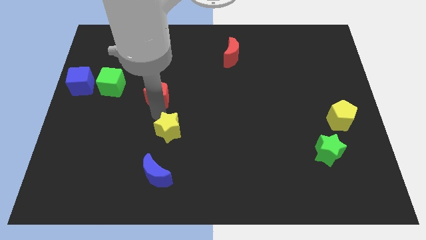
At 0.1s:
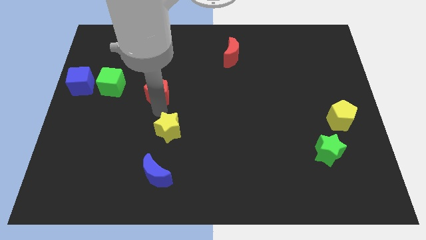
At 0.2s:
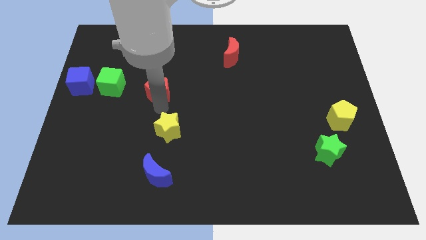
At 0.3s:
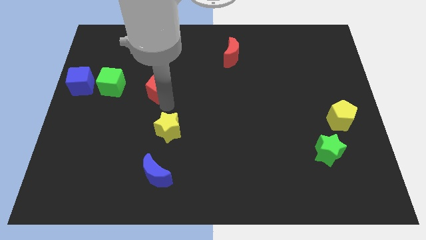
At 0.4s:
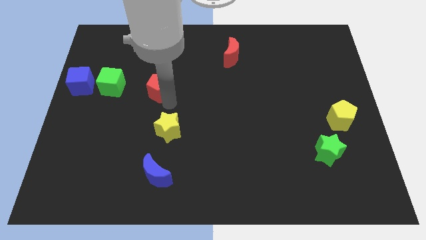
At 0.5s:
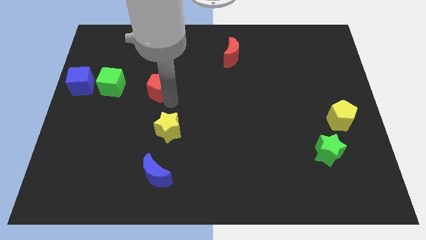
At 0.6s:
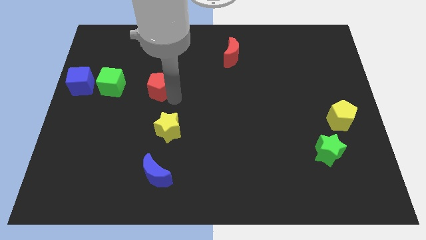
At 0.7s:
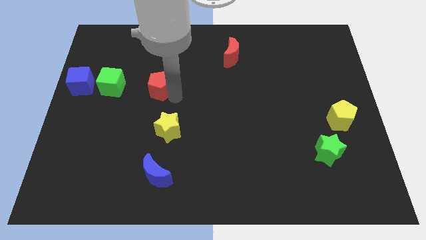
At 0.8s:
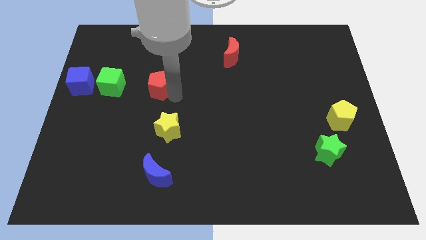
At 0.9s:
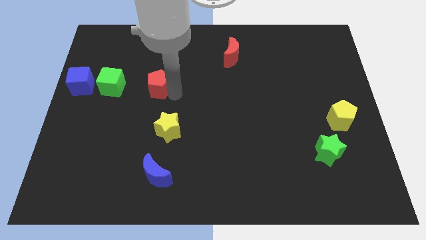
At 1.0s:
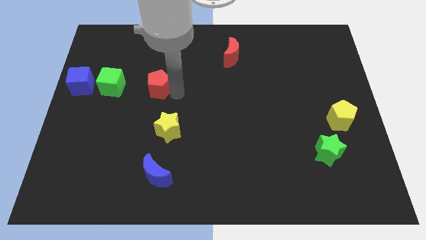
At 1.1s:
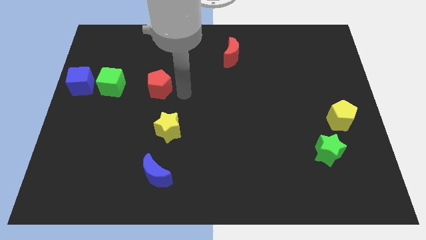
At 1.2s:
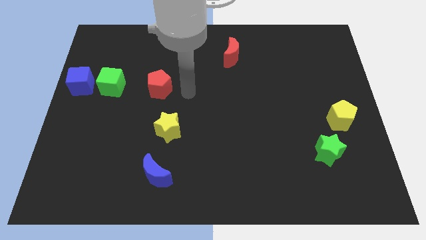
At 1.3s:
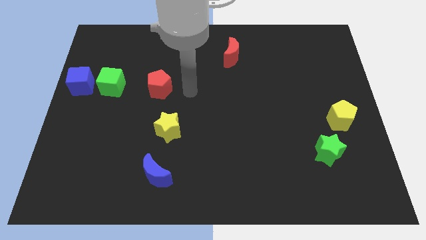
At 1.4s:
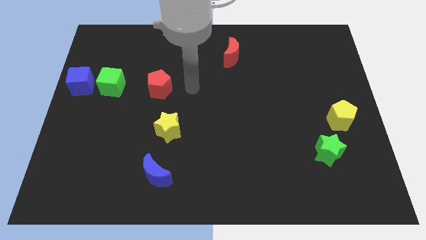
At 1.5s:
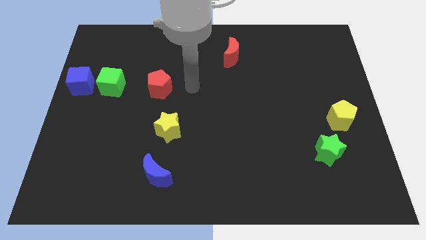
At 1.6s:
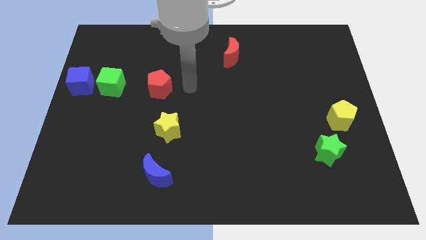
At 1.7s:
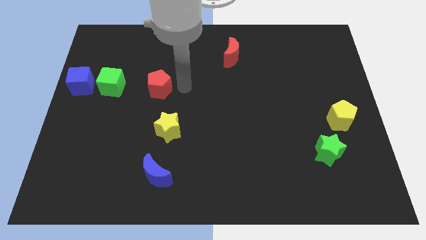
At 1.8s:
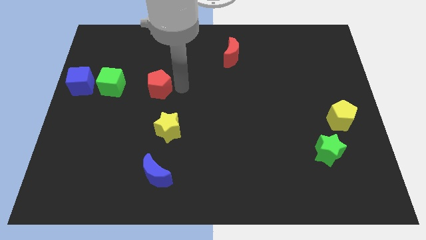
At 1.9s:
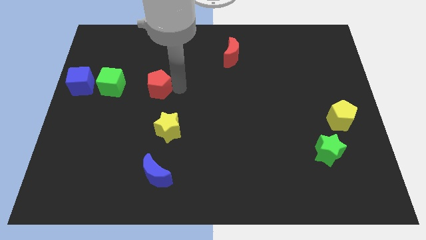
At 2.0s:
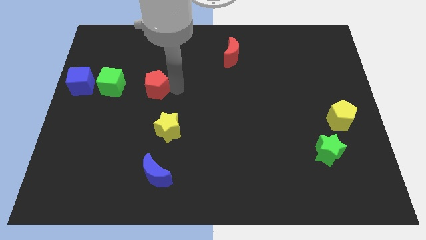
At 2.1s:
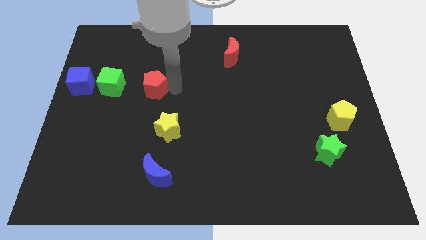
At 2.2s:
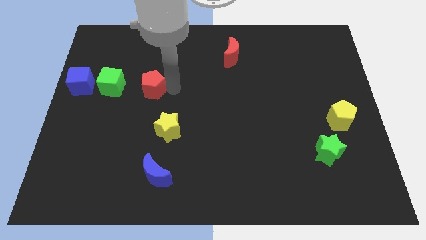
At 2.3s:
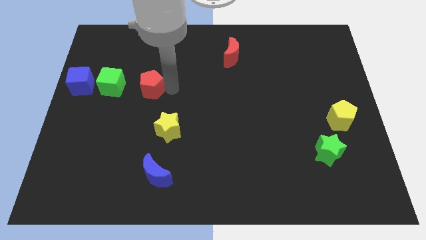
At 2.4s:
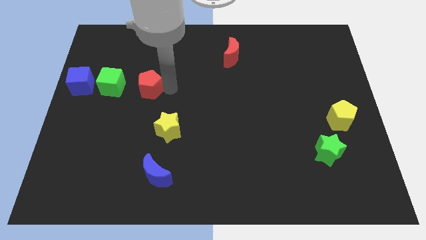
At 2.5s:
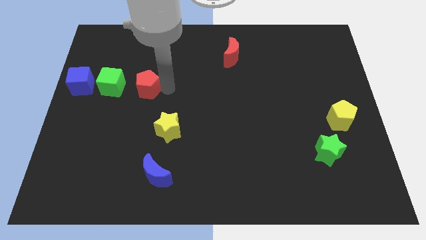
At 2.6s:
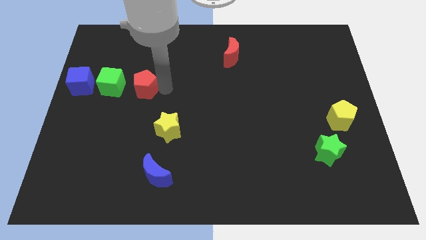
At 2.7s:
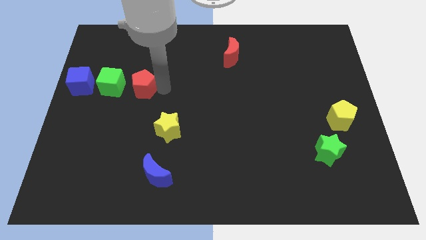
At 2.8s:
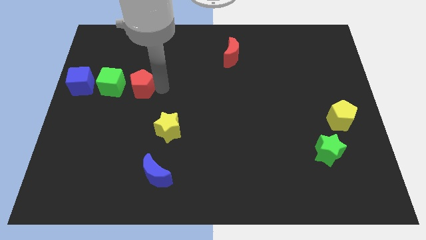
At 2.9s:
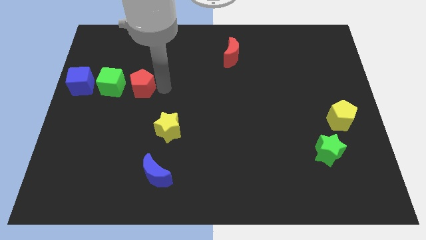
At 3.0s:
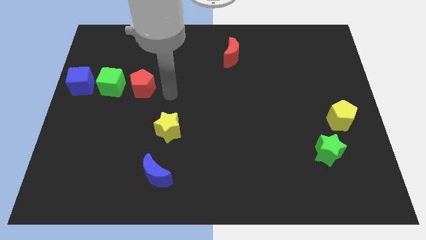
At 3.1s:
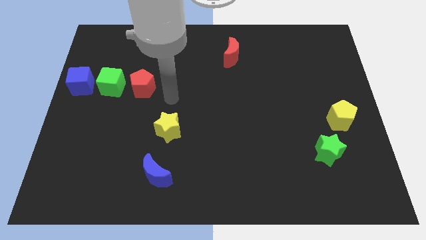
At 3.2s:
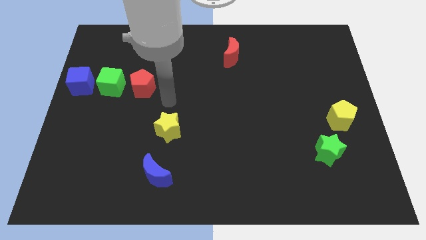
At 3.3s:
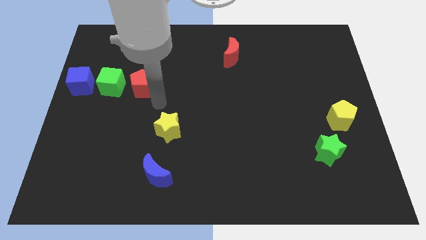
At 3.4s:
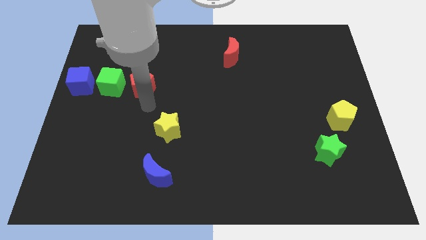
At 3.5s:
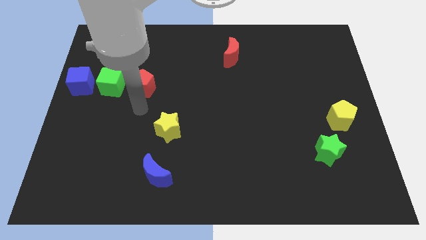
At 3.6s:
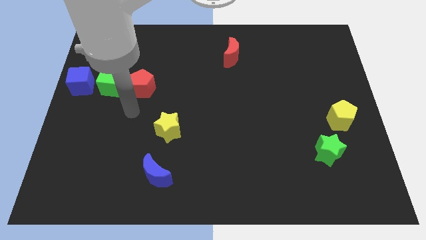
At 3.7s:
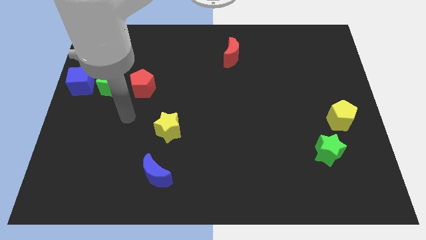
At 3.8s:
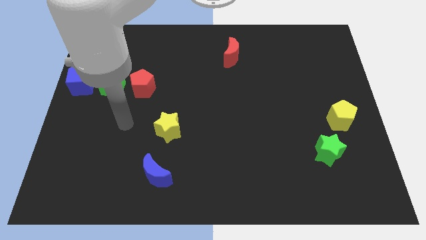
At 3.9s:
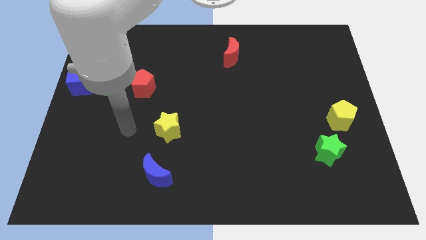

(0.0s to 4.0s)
place the red pentagon right to the green cube to form a horizontal line

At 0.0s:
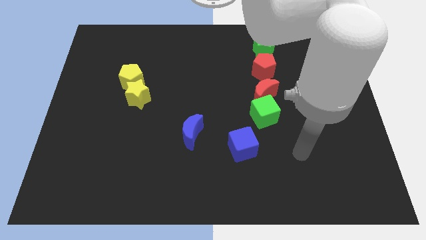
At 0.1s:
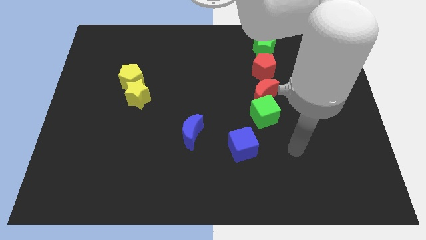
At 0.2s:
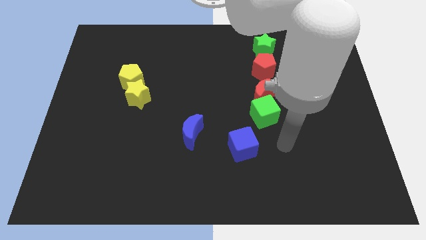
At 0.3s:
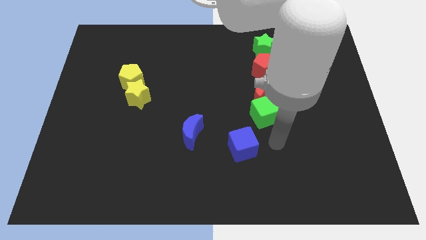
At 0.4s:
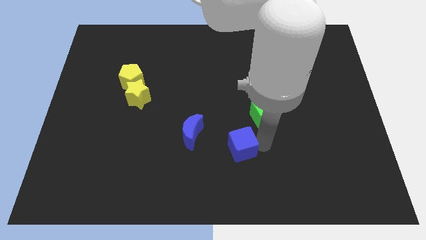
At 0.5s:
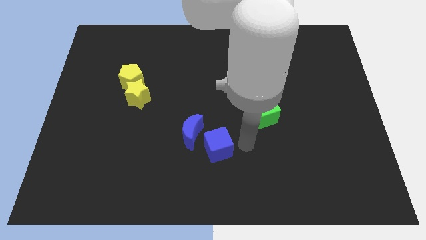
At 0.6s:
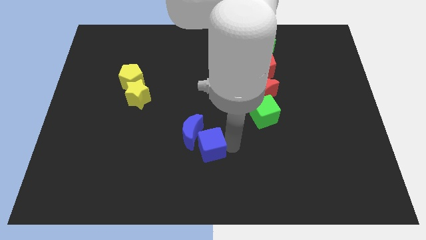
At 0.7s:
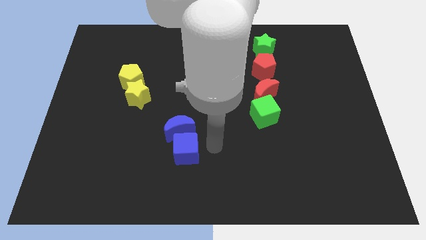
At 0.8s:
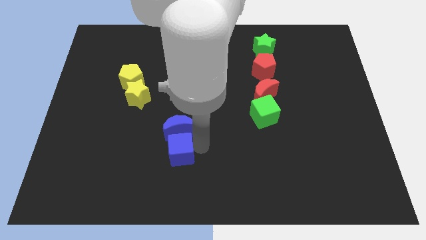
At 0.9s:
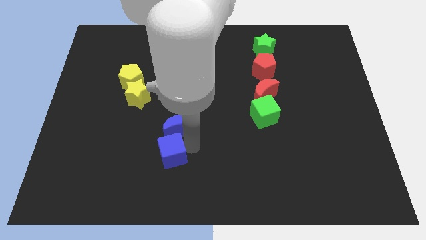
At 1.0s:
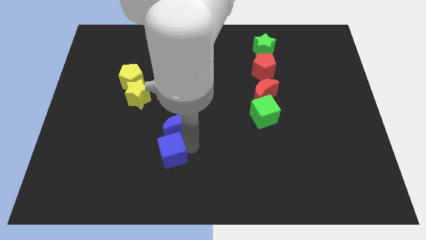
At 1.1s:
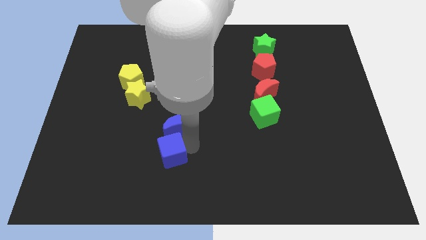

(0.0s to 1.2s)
push the blue cube below the blue crescent

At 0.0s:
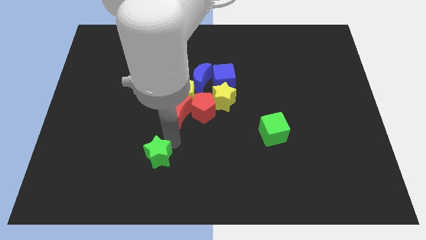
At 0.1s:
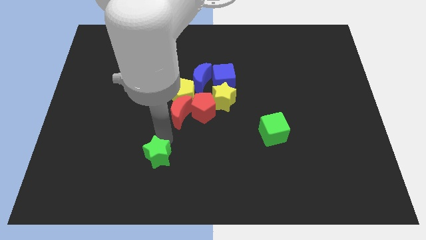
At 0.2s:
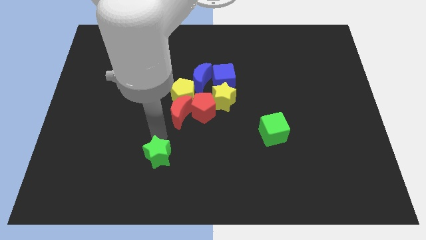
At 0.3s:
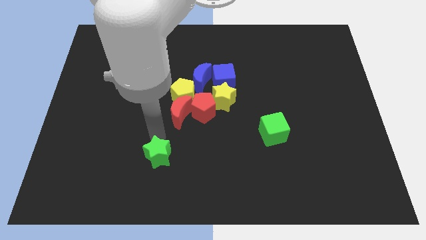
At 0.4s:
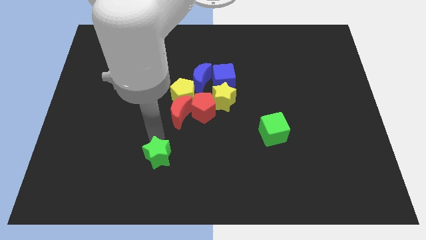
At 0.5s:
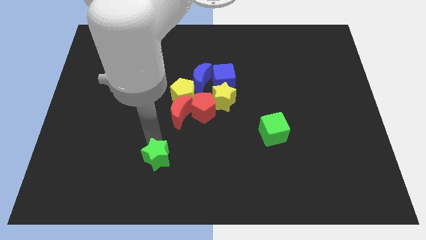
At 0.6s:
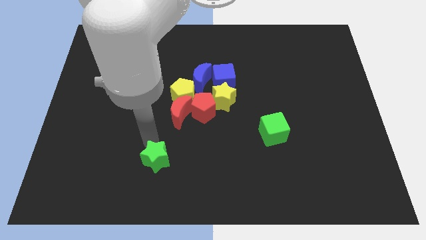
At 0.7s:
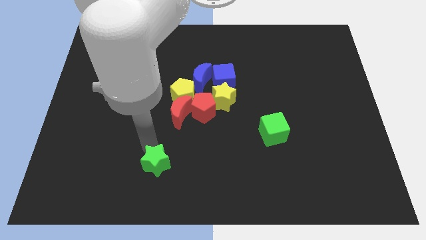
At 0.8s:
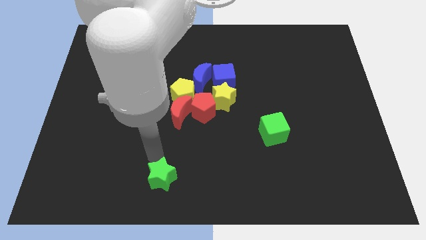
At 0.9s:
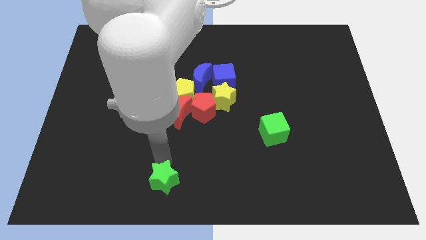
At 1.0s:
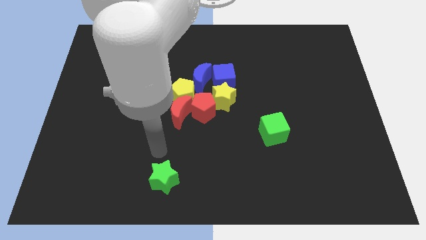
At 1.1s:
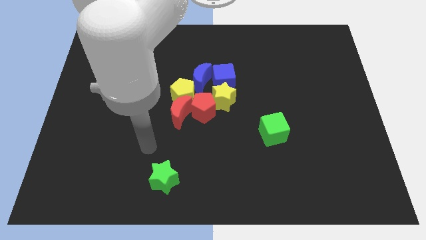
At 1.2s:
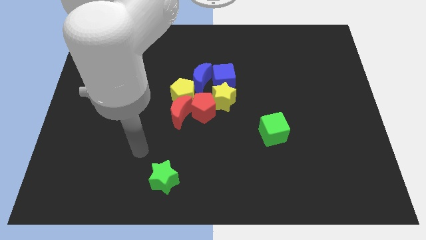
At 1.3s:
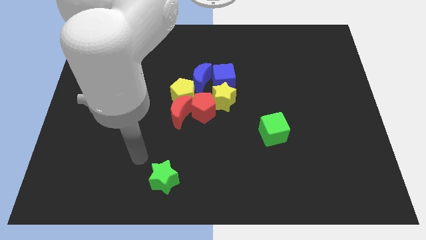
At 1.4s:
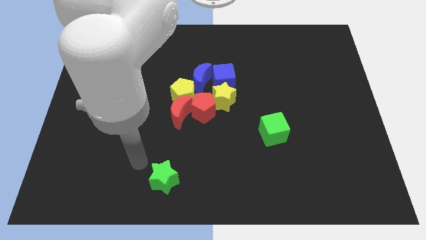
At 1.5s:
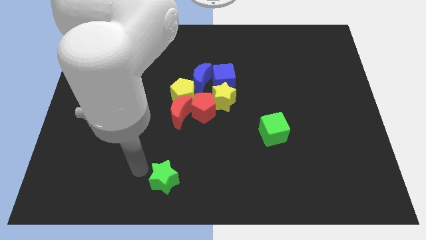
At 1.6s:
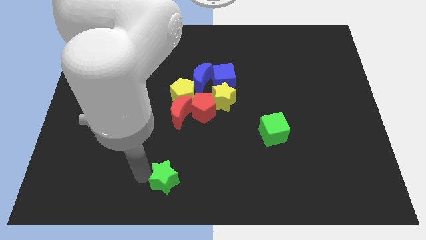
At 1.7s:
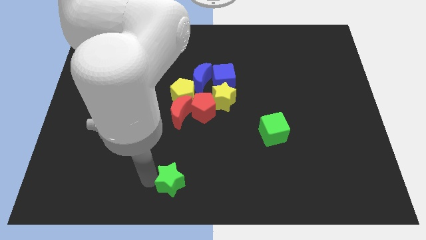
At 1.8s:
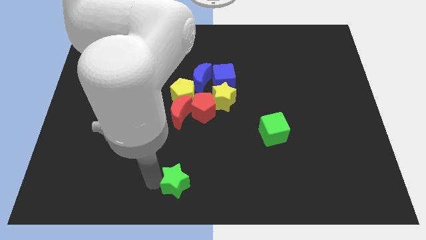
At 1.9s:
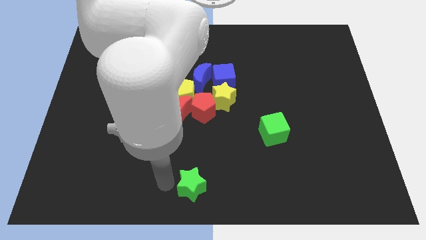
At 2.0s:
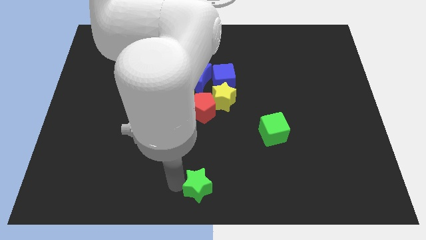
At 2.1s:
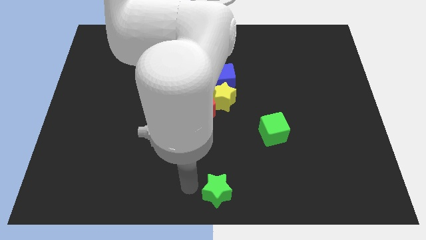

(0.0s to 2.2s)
put the green star below the red pentagon

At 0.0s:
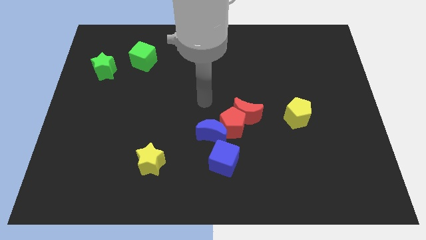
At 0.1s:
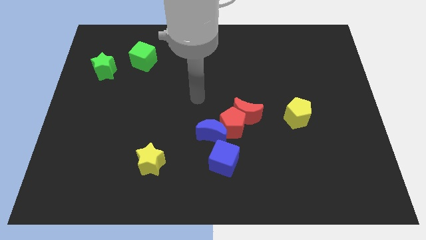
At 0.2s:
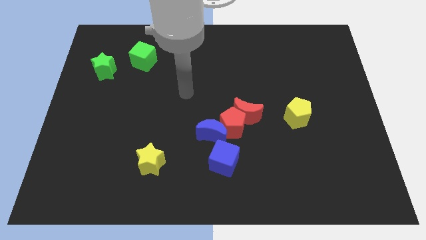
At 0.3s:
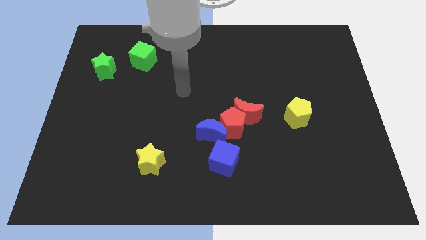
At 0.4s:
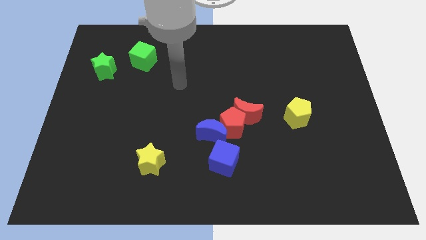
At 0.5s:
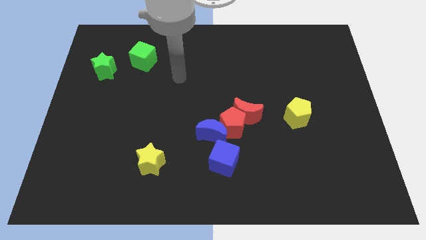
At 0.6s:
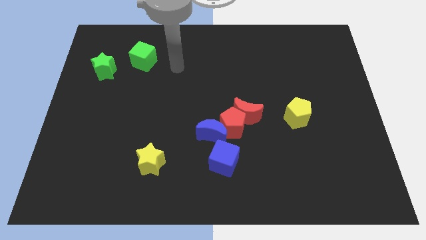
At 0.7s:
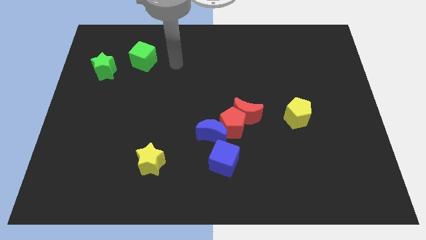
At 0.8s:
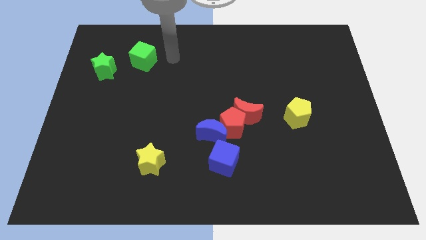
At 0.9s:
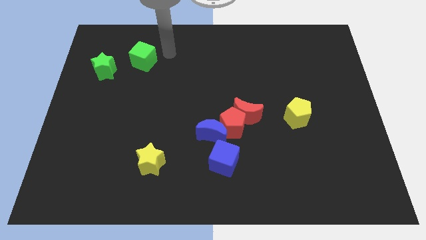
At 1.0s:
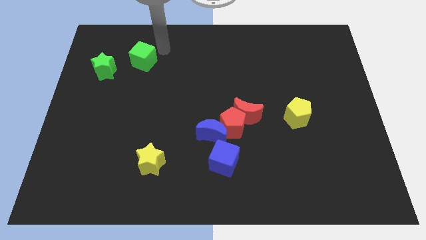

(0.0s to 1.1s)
slide your arm to right of green cube

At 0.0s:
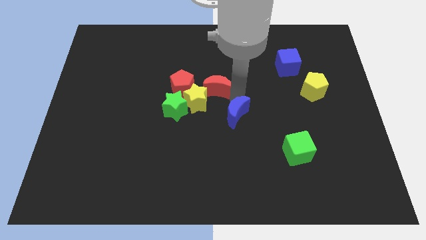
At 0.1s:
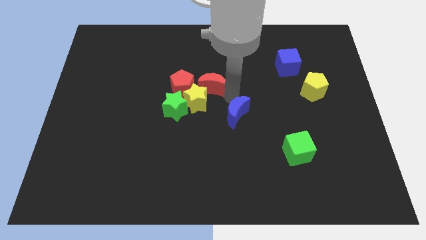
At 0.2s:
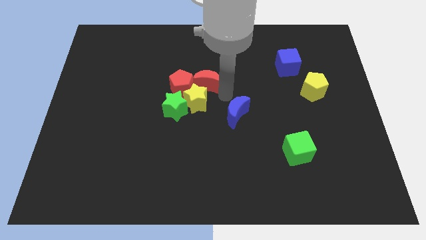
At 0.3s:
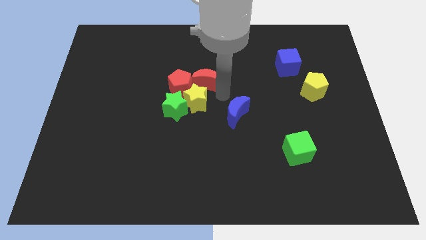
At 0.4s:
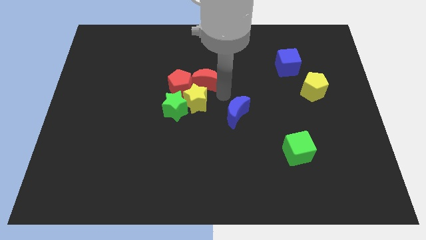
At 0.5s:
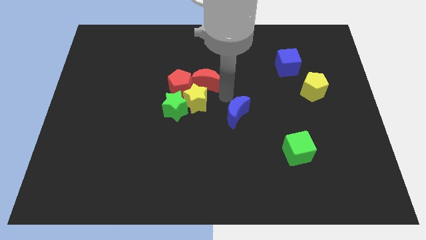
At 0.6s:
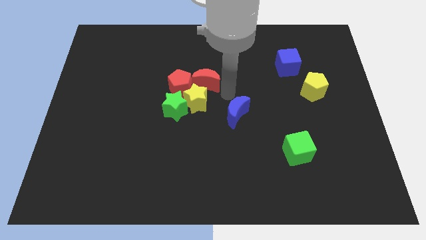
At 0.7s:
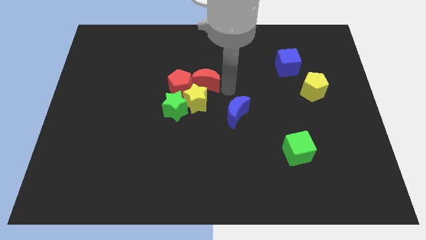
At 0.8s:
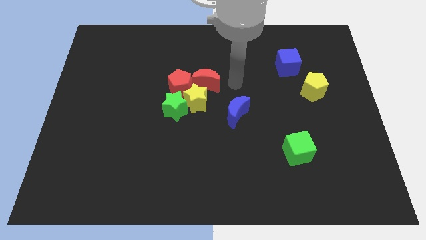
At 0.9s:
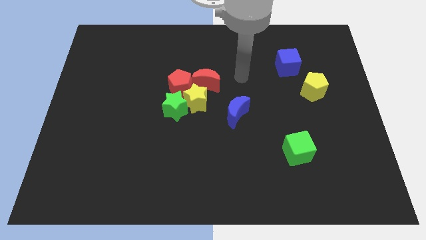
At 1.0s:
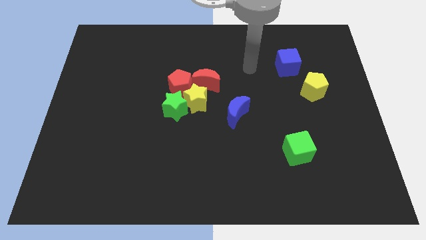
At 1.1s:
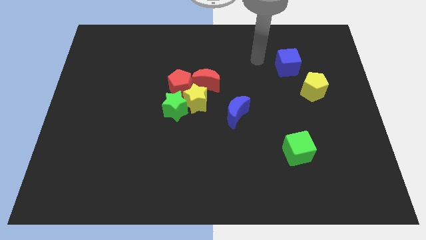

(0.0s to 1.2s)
move the red crescent into the red pentagon
